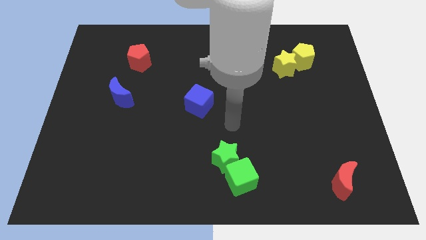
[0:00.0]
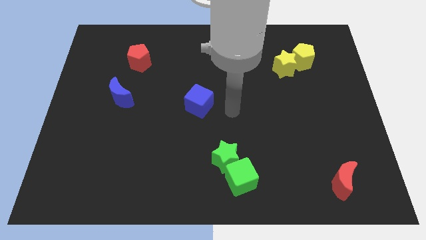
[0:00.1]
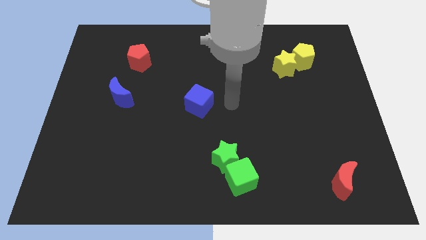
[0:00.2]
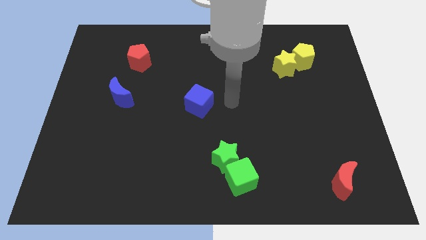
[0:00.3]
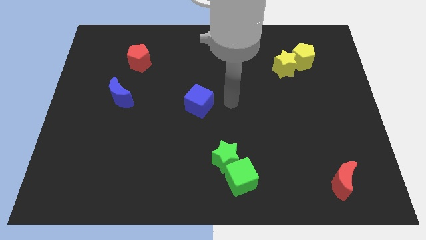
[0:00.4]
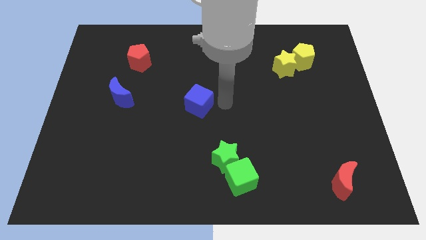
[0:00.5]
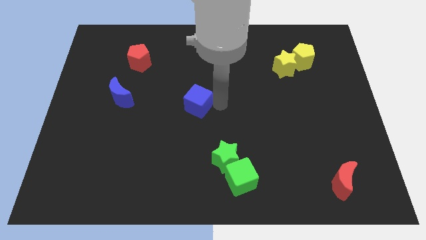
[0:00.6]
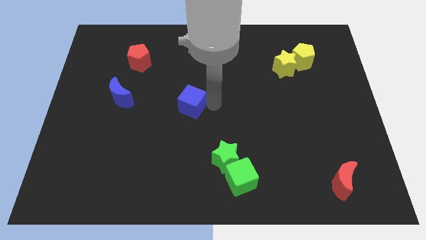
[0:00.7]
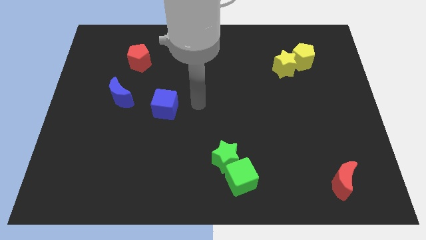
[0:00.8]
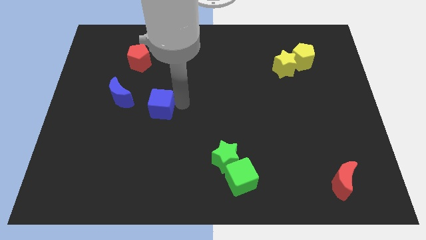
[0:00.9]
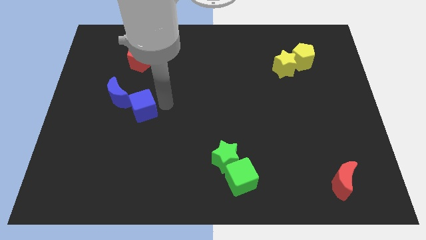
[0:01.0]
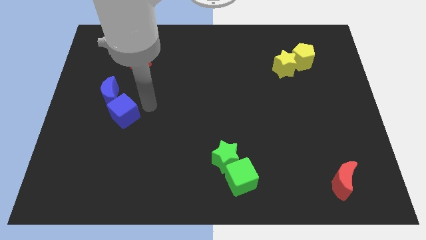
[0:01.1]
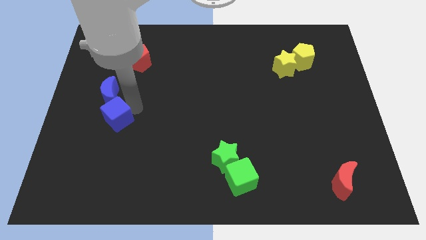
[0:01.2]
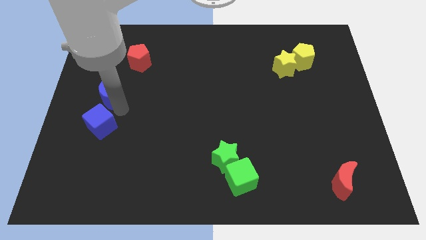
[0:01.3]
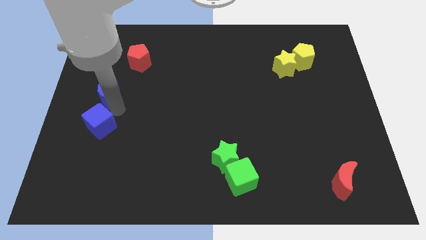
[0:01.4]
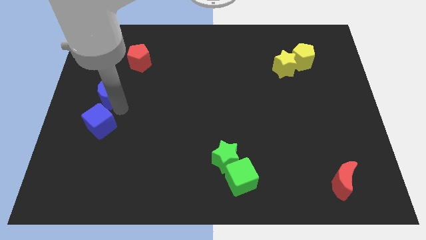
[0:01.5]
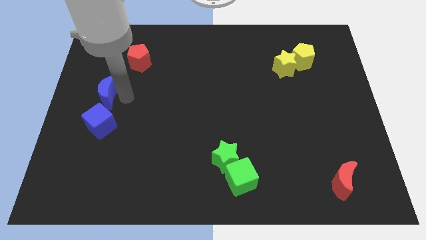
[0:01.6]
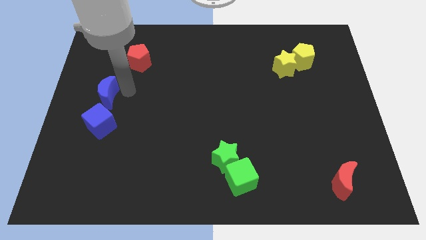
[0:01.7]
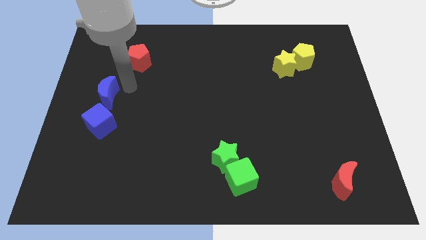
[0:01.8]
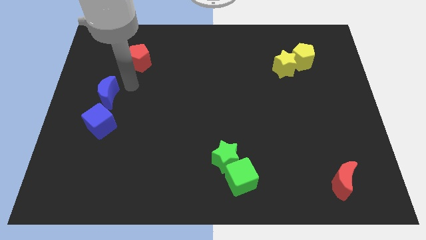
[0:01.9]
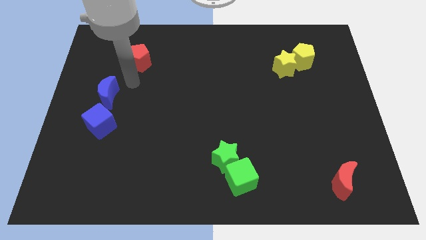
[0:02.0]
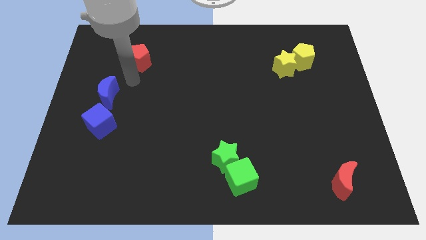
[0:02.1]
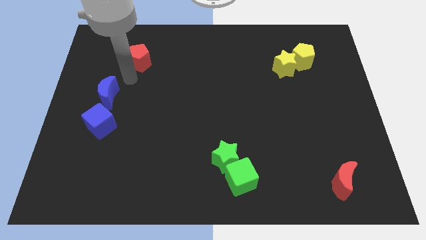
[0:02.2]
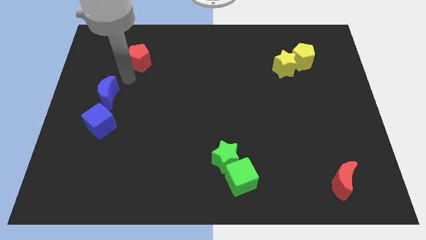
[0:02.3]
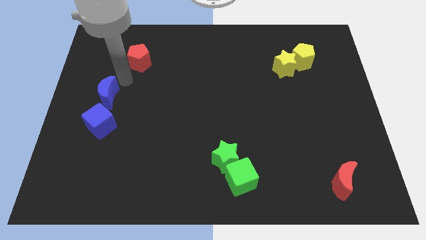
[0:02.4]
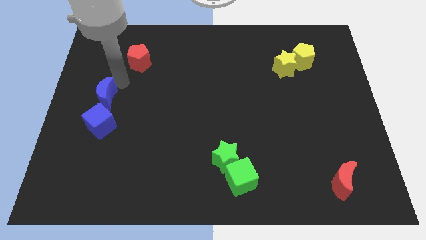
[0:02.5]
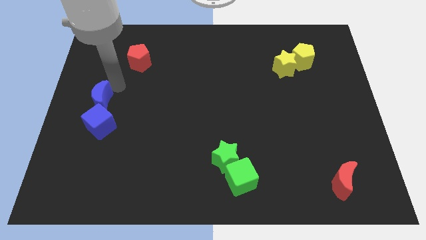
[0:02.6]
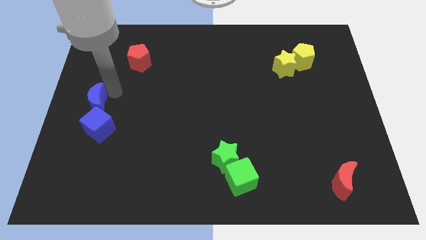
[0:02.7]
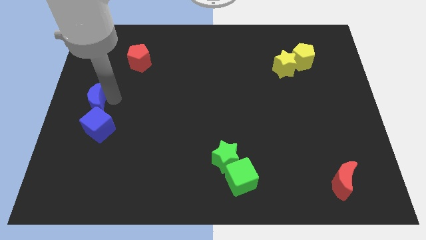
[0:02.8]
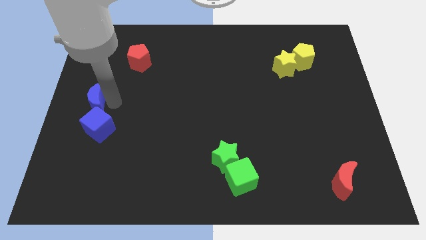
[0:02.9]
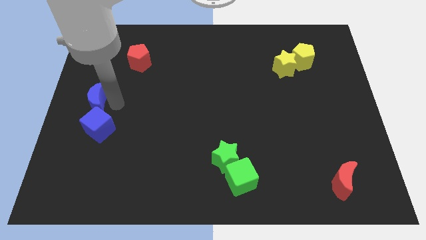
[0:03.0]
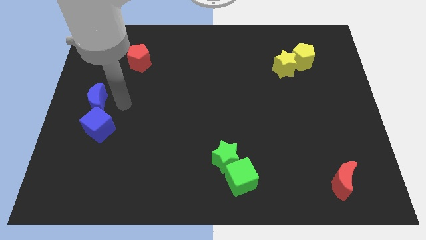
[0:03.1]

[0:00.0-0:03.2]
move the blue crescent into the blue cube

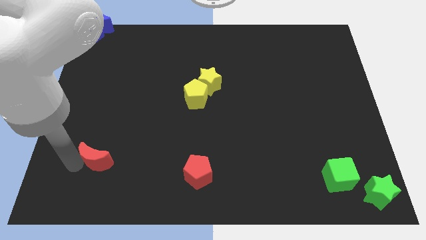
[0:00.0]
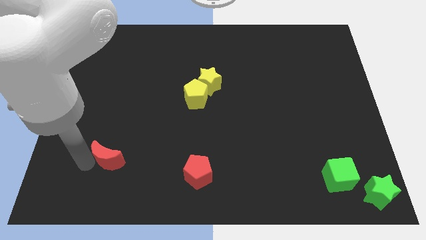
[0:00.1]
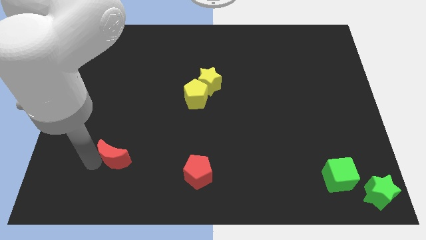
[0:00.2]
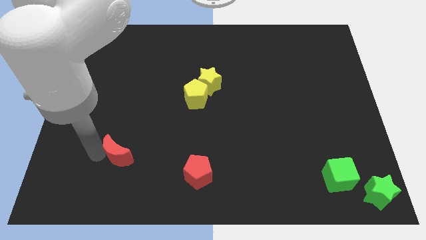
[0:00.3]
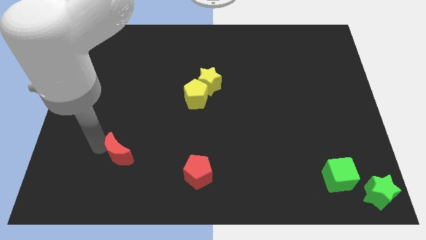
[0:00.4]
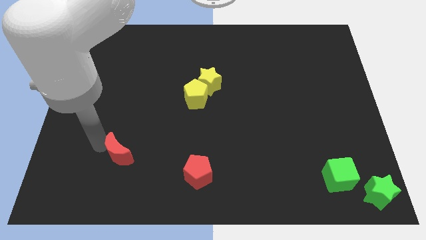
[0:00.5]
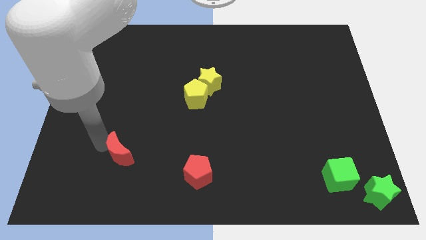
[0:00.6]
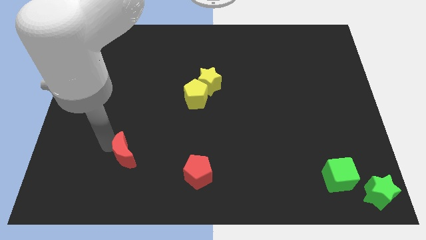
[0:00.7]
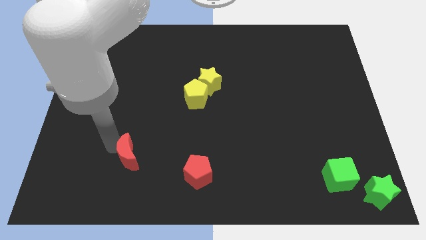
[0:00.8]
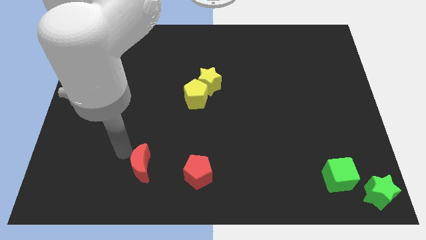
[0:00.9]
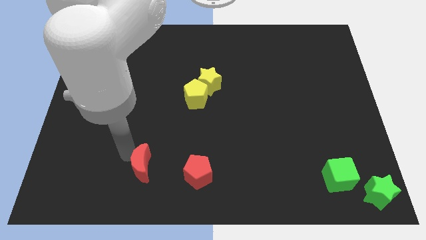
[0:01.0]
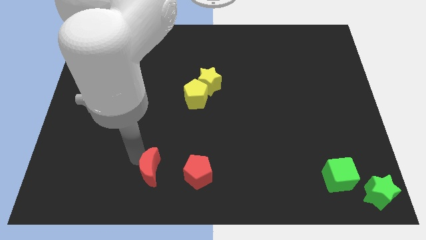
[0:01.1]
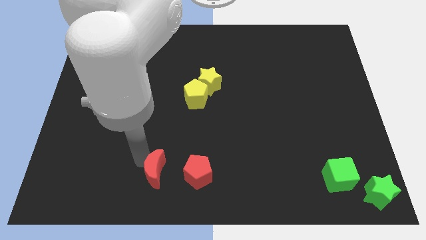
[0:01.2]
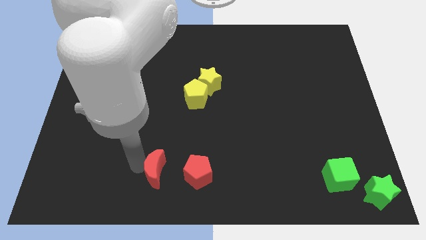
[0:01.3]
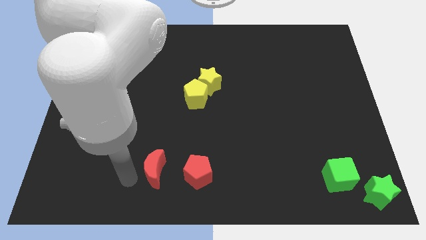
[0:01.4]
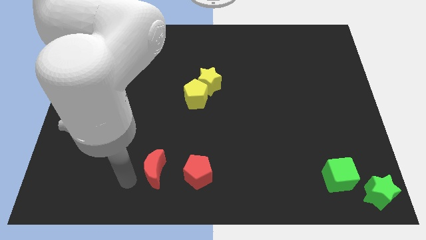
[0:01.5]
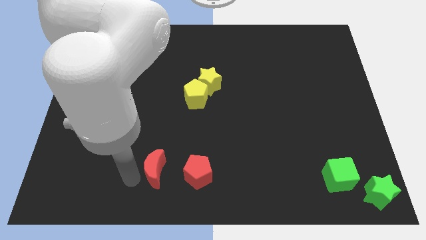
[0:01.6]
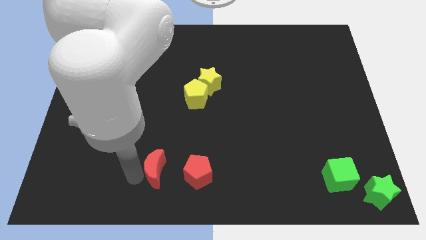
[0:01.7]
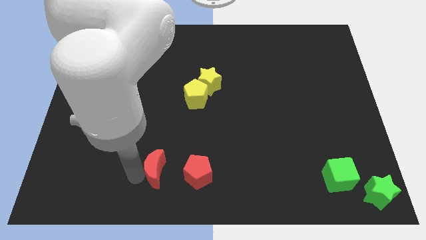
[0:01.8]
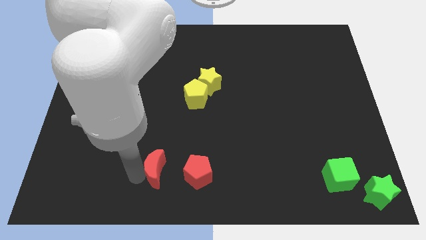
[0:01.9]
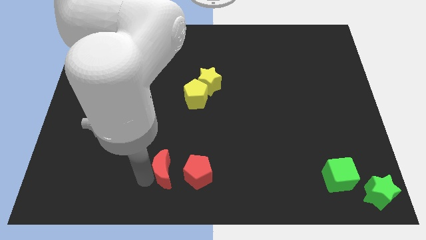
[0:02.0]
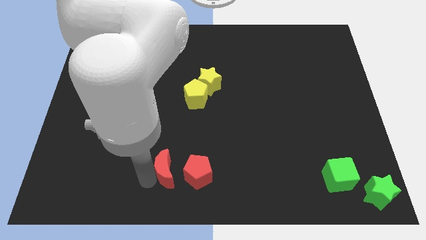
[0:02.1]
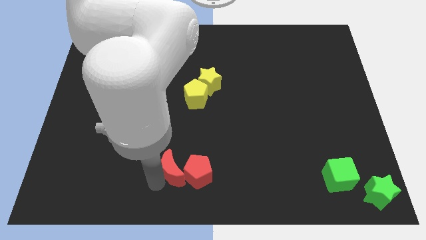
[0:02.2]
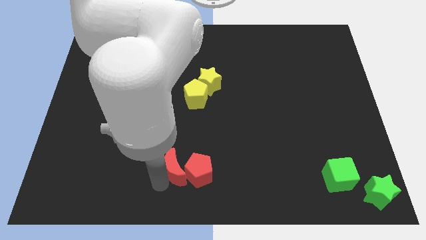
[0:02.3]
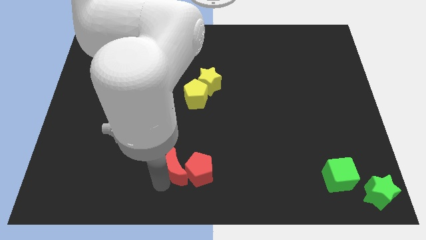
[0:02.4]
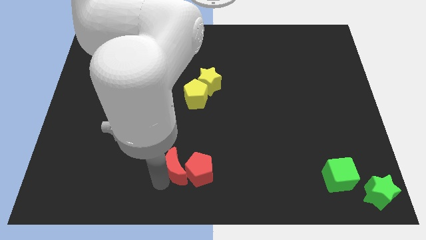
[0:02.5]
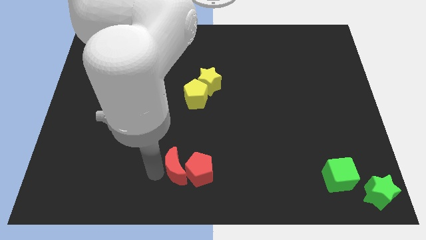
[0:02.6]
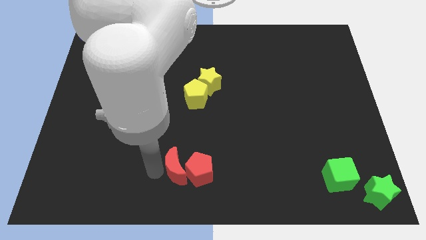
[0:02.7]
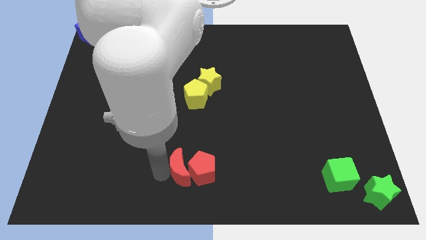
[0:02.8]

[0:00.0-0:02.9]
push the red moon into the red pentagon

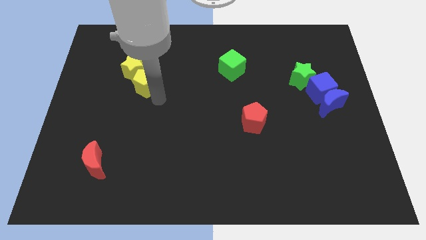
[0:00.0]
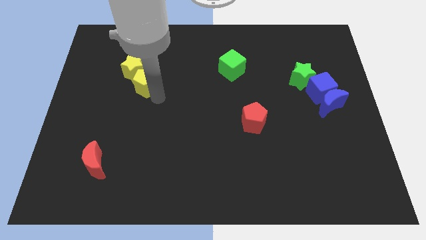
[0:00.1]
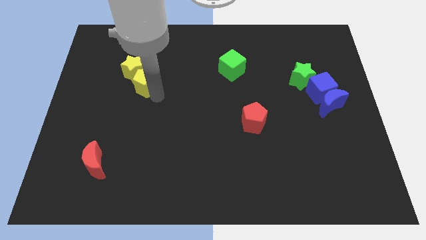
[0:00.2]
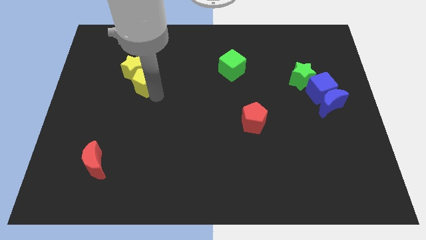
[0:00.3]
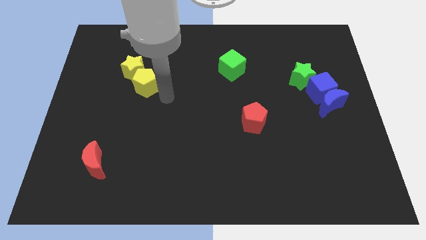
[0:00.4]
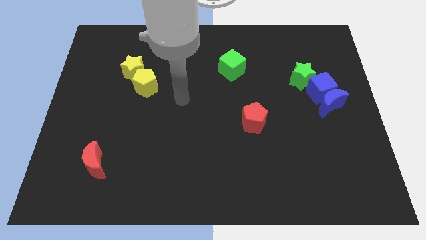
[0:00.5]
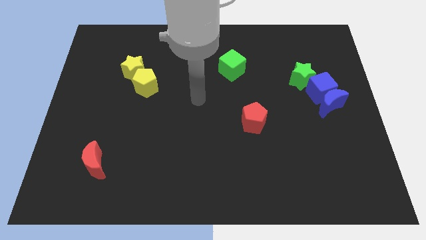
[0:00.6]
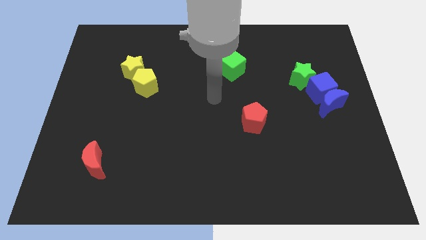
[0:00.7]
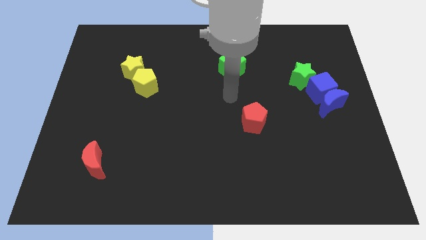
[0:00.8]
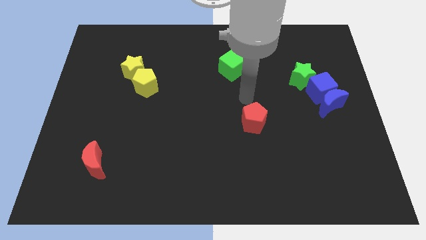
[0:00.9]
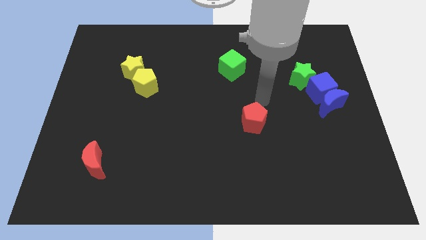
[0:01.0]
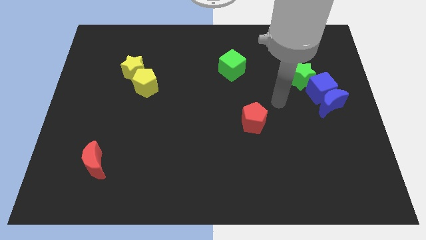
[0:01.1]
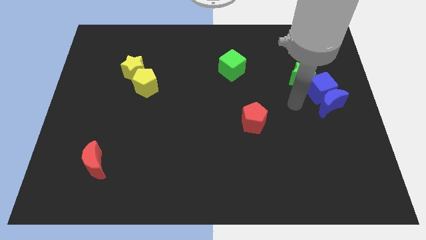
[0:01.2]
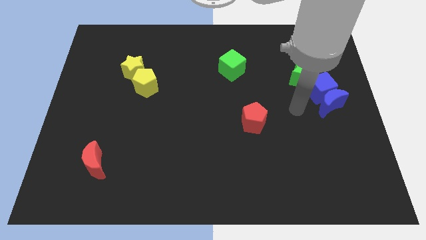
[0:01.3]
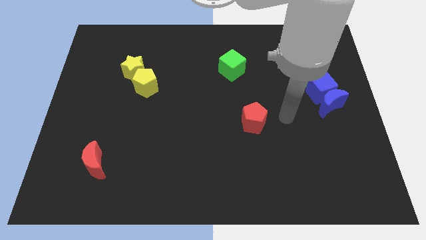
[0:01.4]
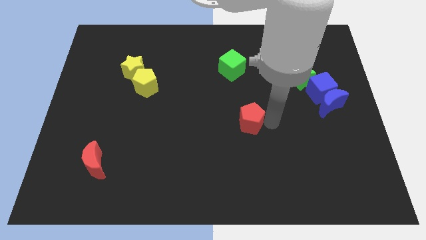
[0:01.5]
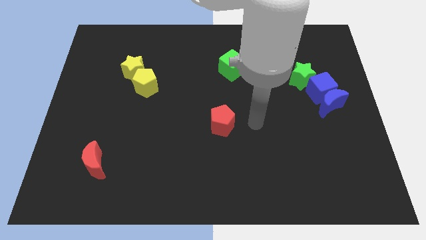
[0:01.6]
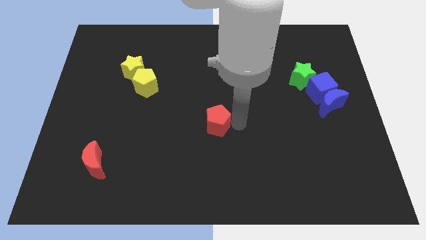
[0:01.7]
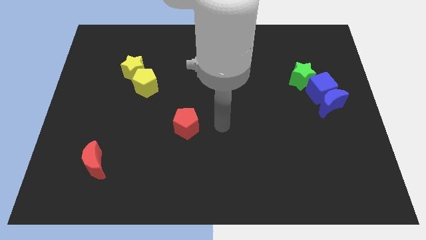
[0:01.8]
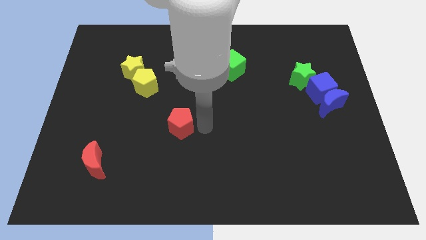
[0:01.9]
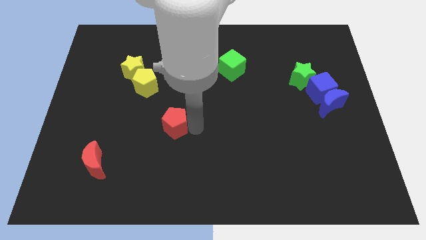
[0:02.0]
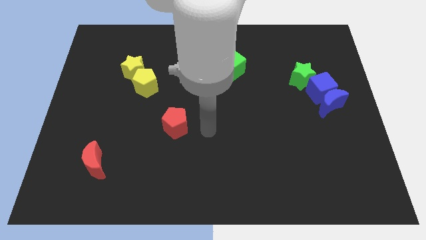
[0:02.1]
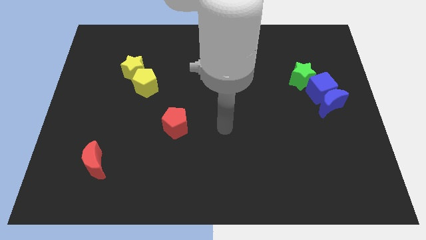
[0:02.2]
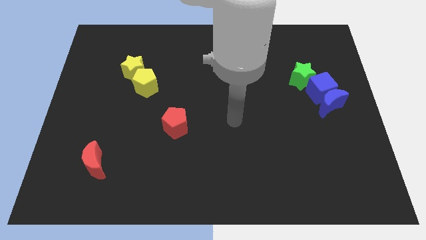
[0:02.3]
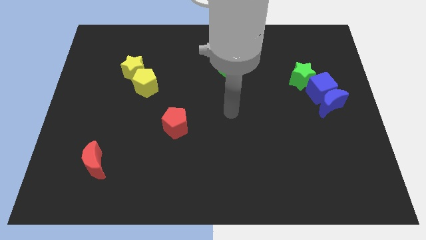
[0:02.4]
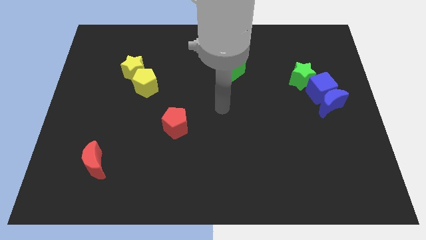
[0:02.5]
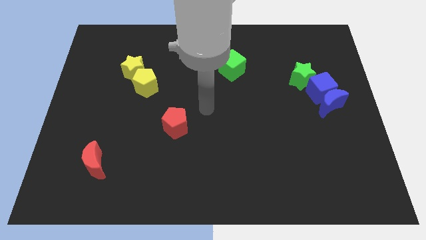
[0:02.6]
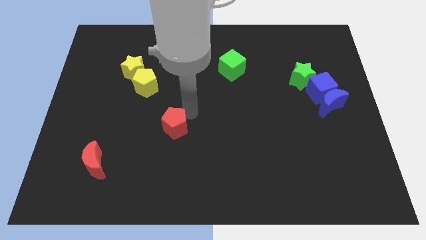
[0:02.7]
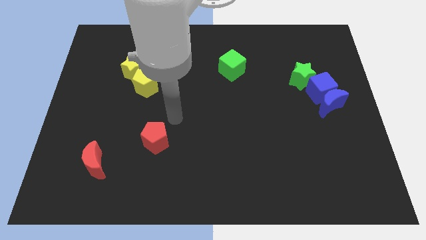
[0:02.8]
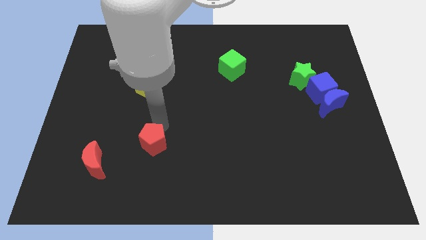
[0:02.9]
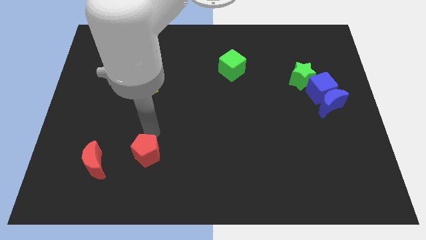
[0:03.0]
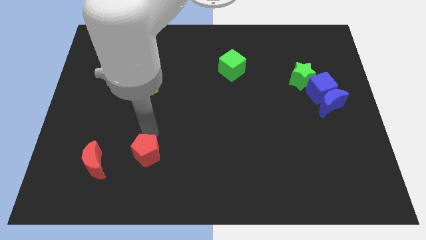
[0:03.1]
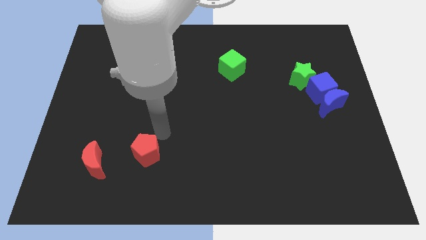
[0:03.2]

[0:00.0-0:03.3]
place the red pentagon vertically below the yellow blocks
